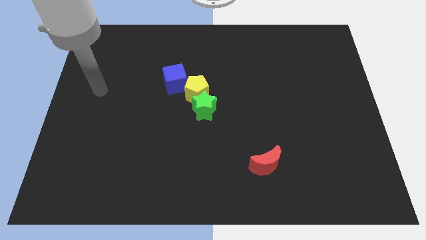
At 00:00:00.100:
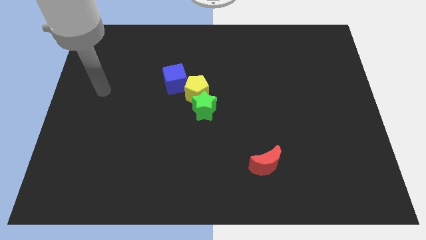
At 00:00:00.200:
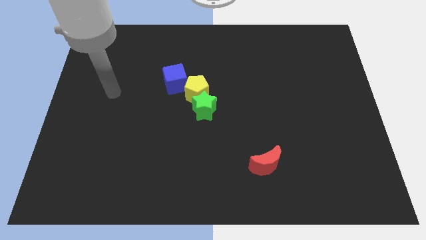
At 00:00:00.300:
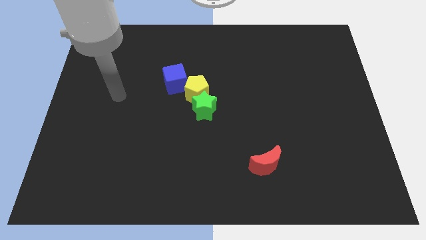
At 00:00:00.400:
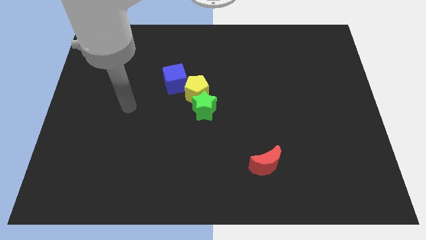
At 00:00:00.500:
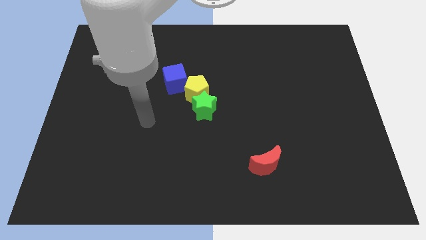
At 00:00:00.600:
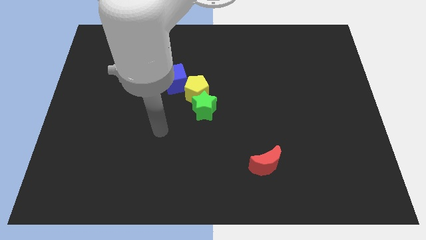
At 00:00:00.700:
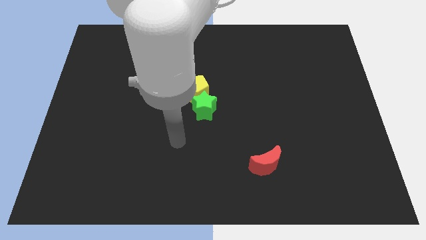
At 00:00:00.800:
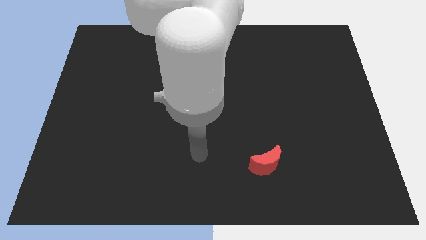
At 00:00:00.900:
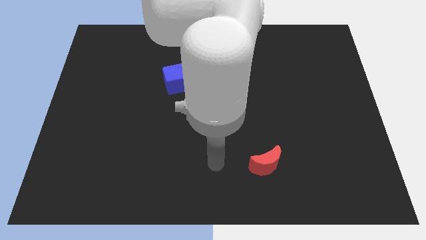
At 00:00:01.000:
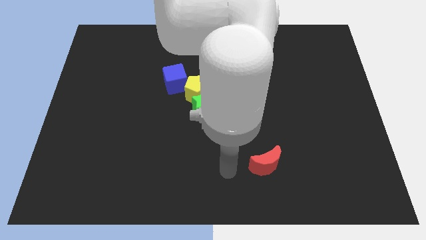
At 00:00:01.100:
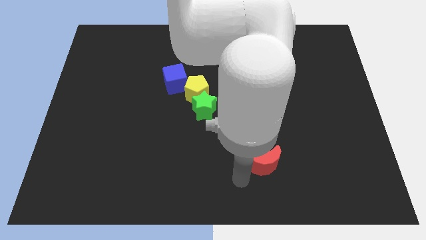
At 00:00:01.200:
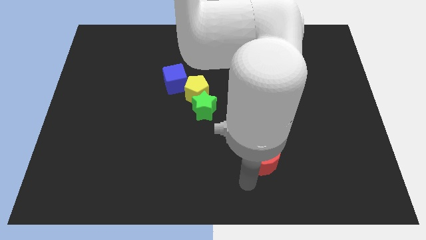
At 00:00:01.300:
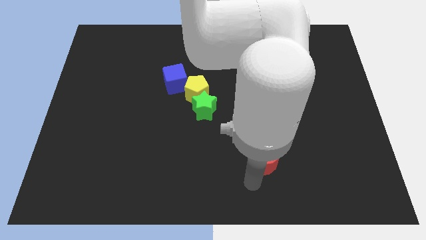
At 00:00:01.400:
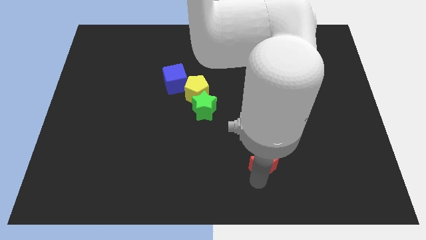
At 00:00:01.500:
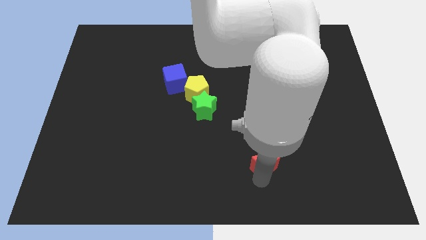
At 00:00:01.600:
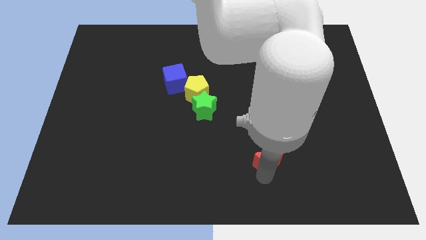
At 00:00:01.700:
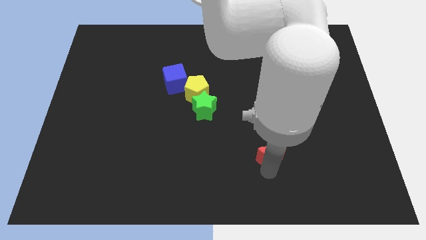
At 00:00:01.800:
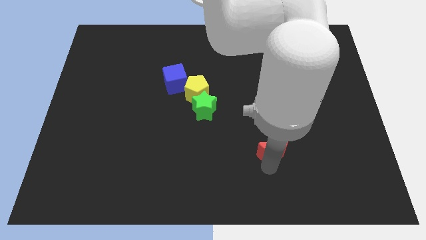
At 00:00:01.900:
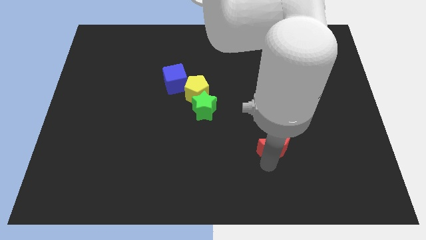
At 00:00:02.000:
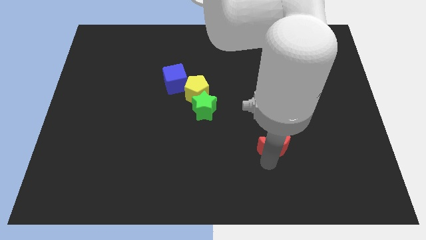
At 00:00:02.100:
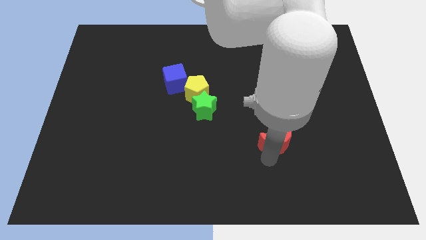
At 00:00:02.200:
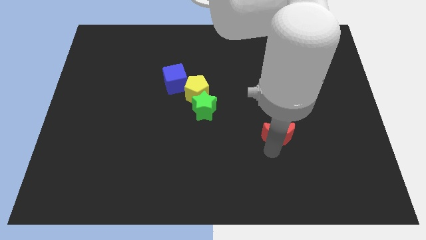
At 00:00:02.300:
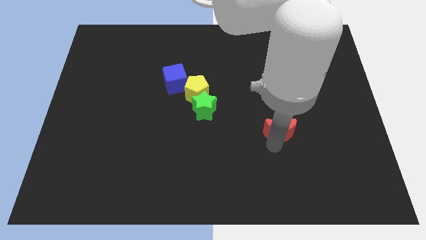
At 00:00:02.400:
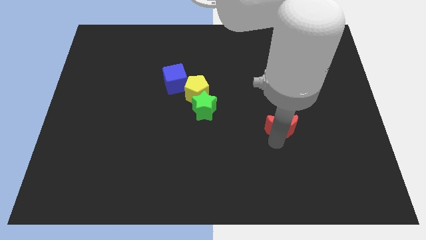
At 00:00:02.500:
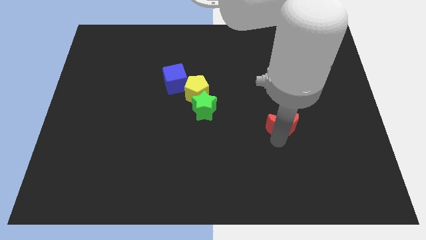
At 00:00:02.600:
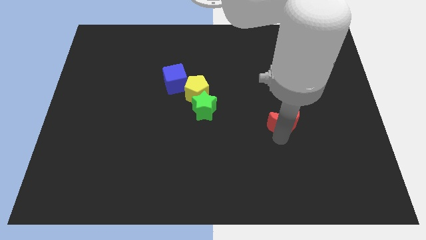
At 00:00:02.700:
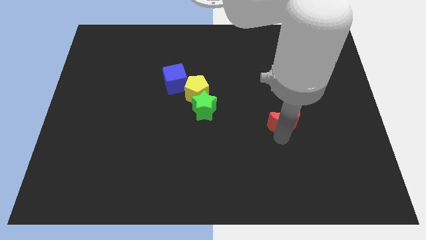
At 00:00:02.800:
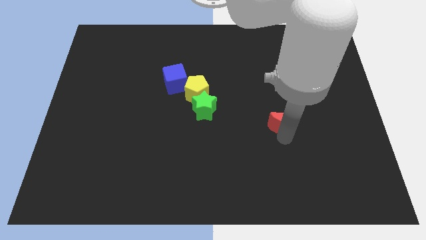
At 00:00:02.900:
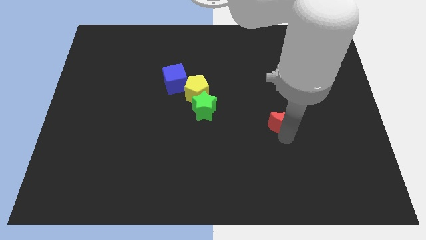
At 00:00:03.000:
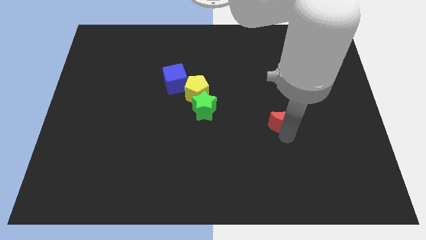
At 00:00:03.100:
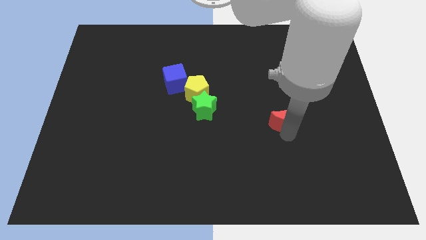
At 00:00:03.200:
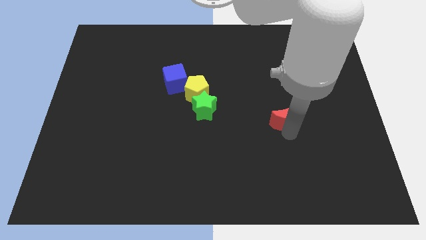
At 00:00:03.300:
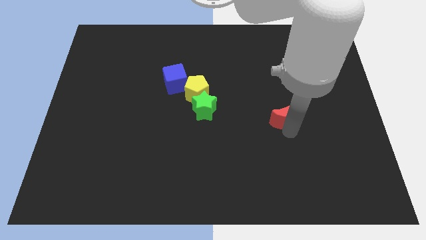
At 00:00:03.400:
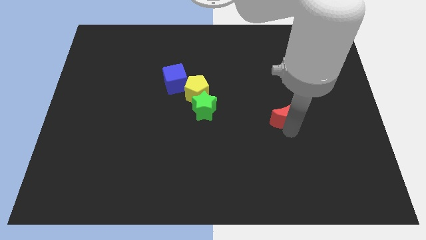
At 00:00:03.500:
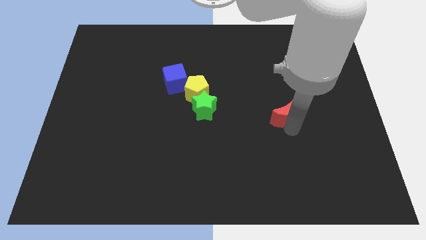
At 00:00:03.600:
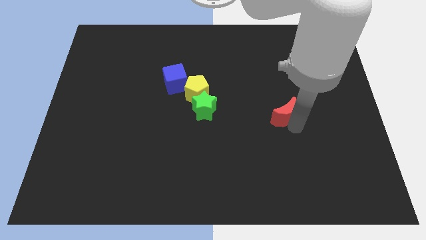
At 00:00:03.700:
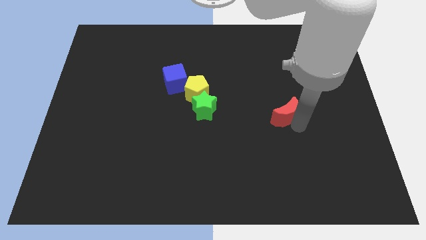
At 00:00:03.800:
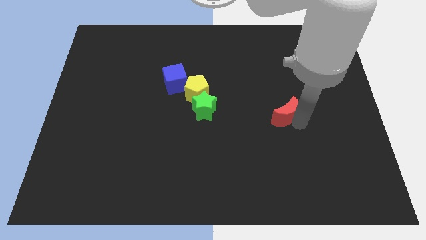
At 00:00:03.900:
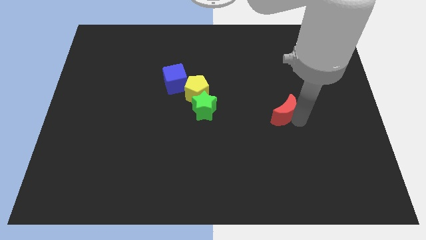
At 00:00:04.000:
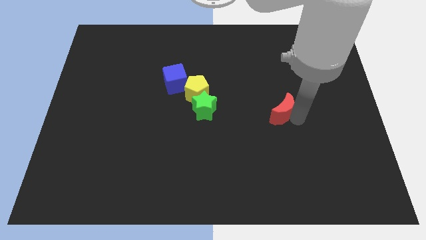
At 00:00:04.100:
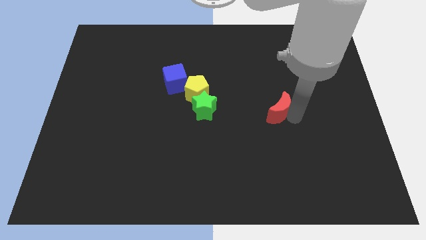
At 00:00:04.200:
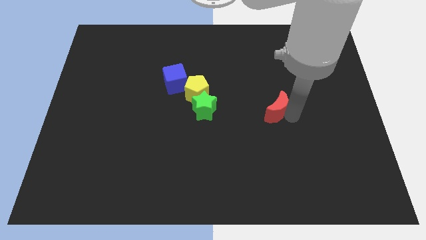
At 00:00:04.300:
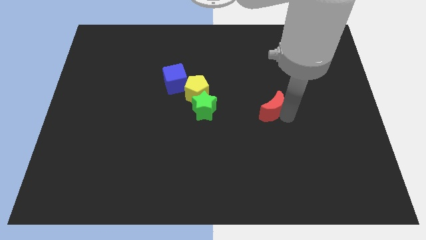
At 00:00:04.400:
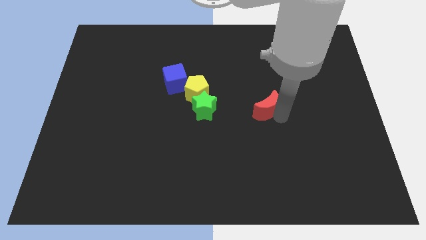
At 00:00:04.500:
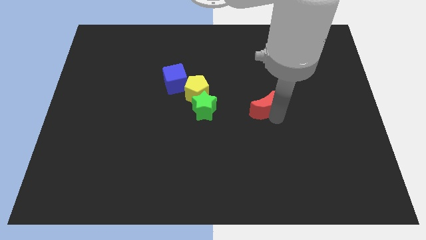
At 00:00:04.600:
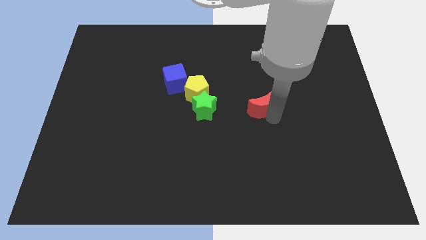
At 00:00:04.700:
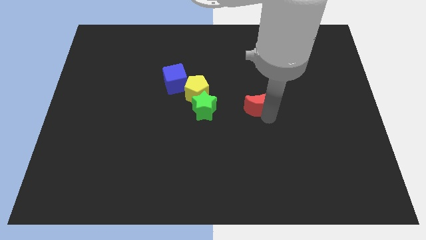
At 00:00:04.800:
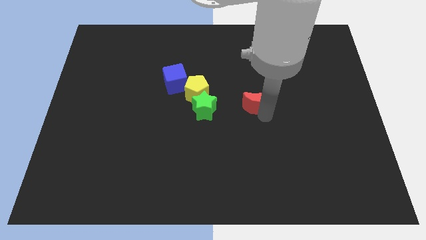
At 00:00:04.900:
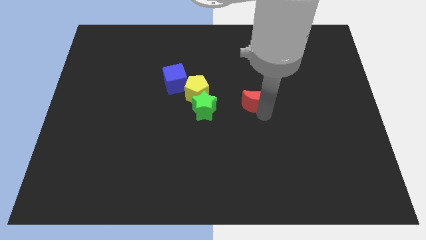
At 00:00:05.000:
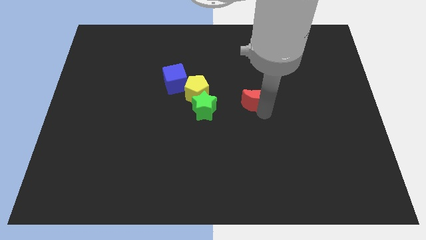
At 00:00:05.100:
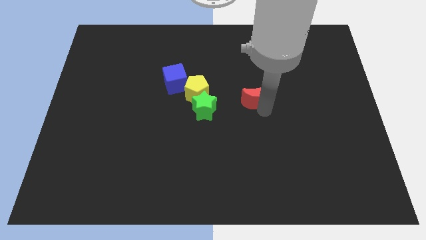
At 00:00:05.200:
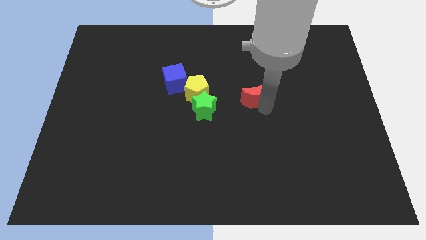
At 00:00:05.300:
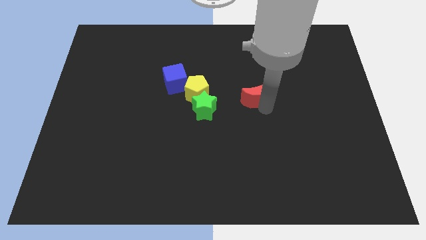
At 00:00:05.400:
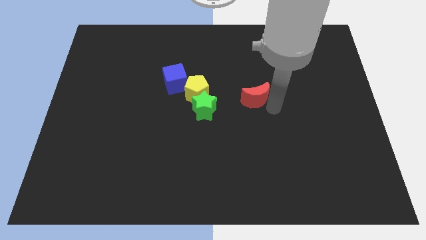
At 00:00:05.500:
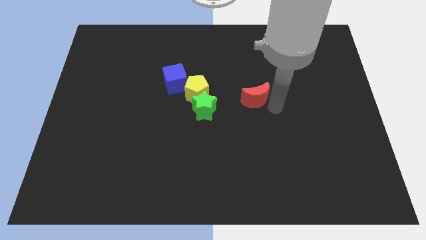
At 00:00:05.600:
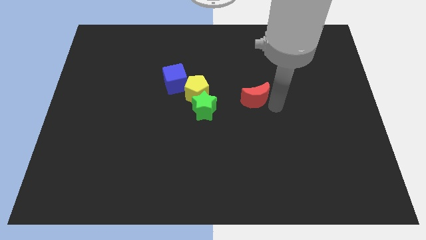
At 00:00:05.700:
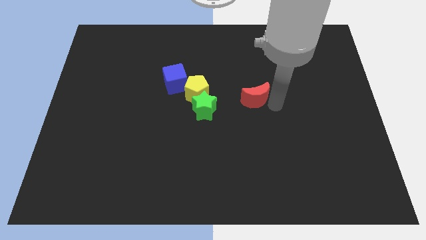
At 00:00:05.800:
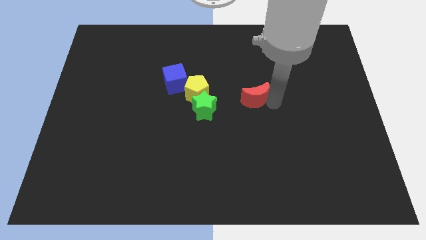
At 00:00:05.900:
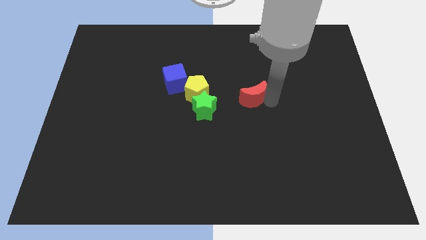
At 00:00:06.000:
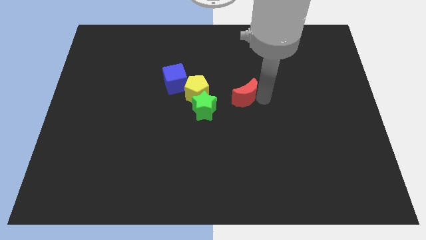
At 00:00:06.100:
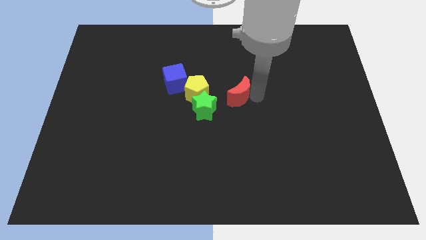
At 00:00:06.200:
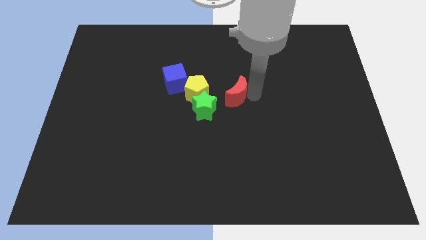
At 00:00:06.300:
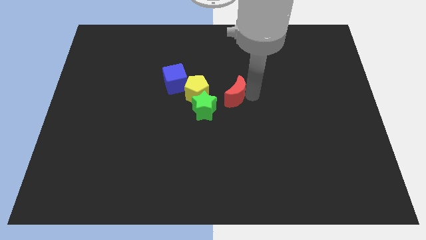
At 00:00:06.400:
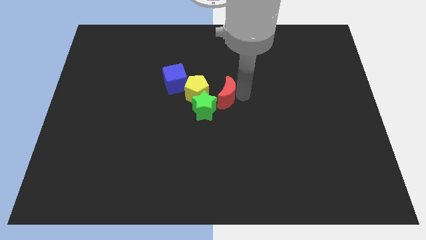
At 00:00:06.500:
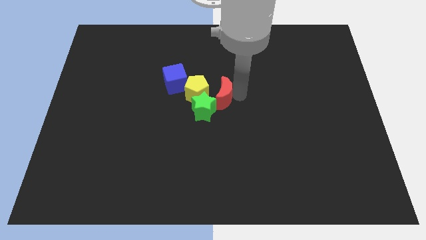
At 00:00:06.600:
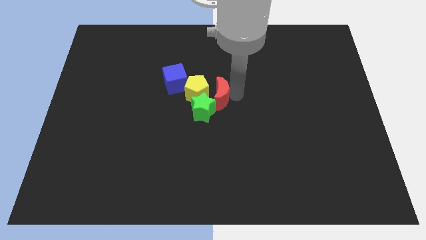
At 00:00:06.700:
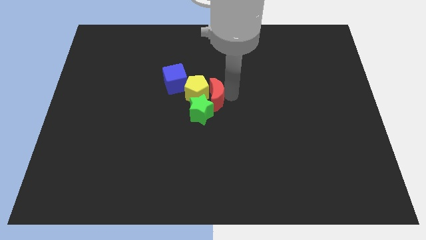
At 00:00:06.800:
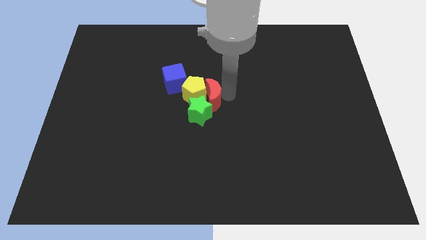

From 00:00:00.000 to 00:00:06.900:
slide the moon close to the yellow block

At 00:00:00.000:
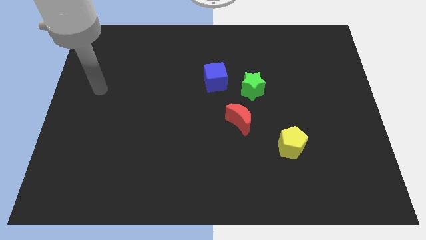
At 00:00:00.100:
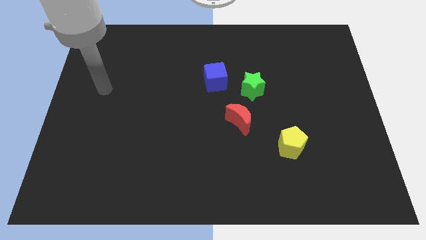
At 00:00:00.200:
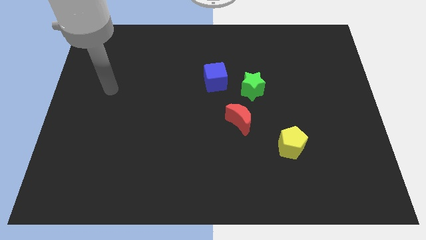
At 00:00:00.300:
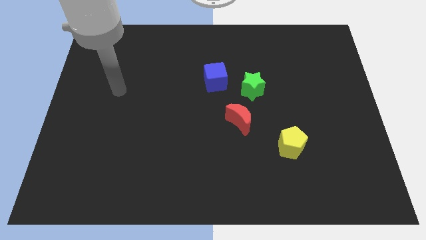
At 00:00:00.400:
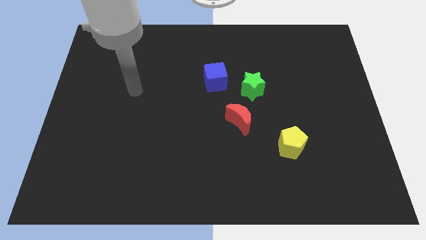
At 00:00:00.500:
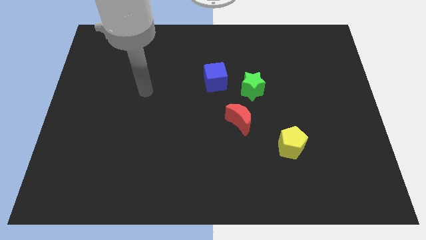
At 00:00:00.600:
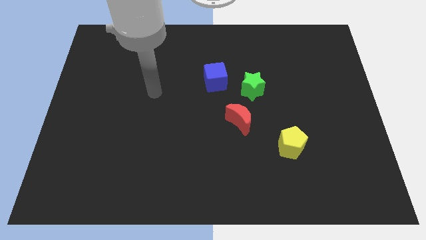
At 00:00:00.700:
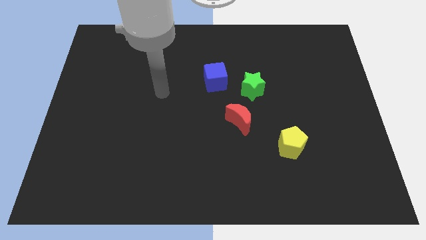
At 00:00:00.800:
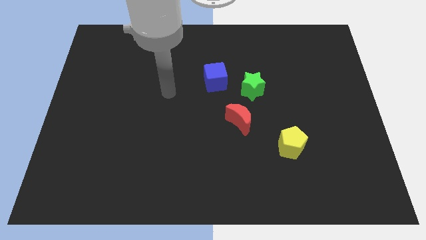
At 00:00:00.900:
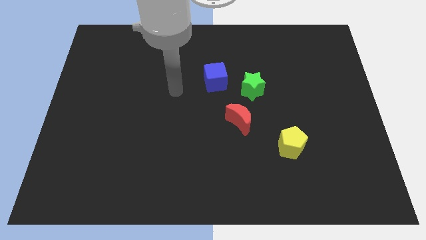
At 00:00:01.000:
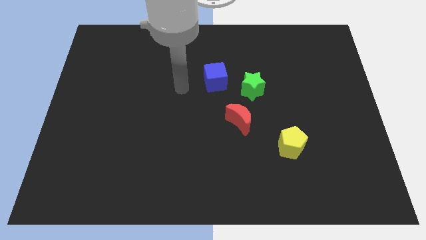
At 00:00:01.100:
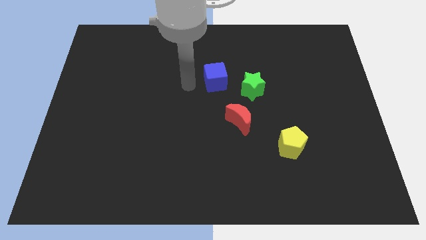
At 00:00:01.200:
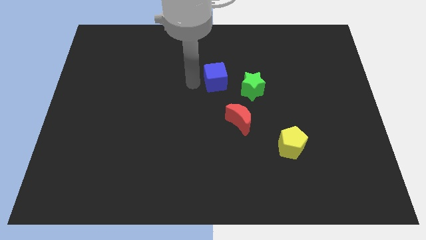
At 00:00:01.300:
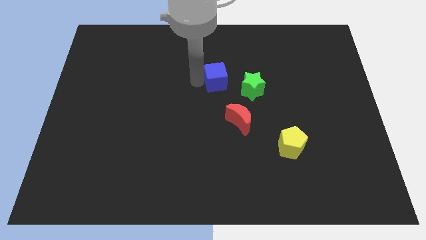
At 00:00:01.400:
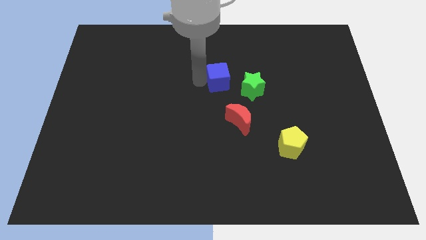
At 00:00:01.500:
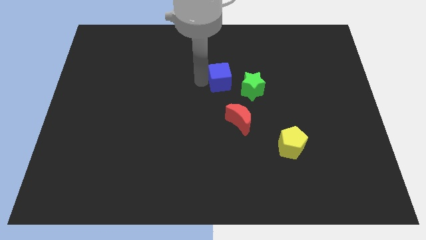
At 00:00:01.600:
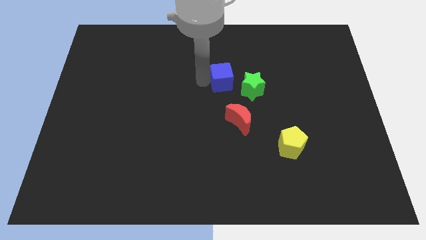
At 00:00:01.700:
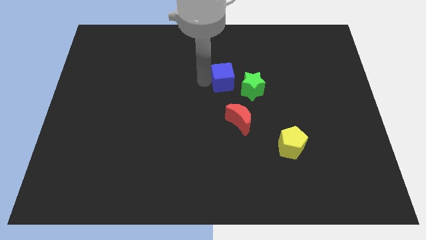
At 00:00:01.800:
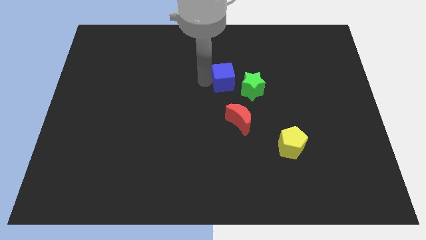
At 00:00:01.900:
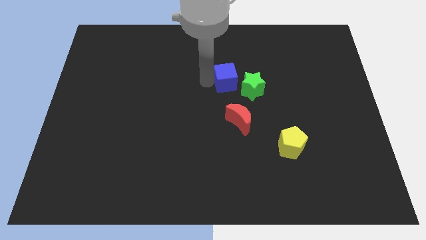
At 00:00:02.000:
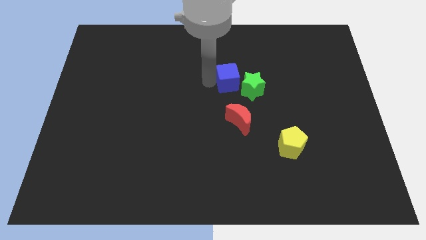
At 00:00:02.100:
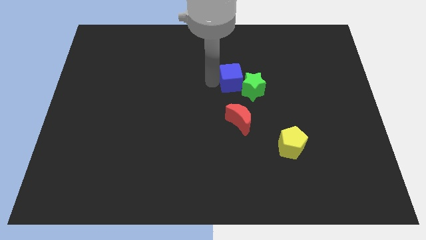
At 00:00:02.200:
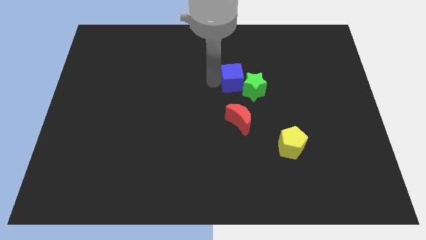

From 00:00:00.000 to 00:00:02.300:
move the blue cube to the green block
